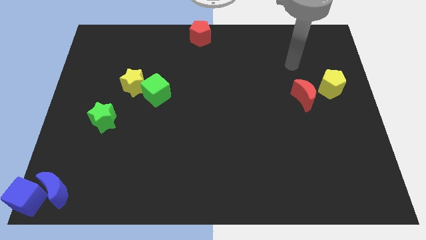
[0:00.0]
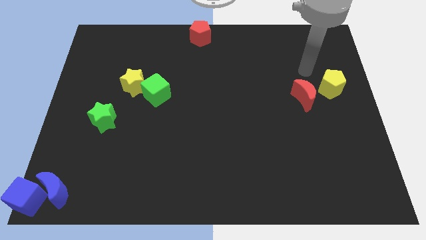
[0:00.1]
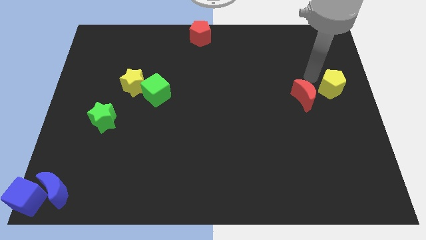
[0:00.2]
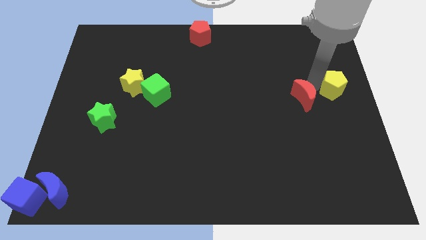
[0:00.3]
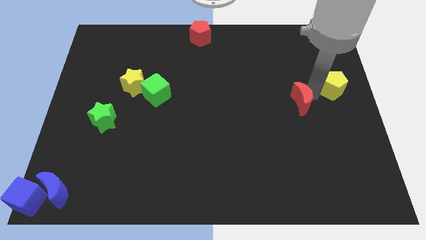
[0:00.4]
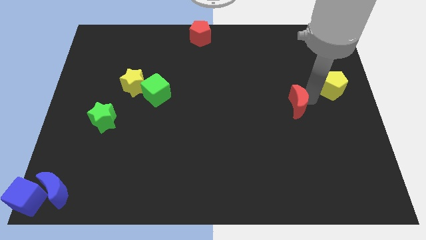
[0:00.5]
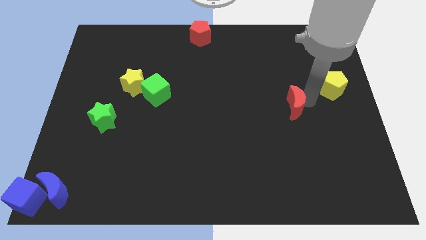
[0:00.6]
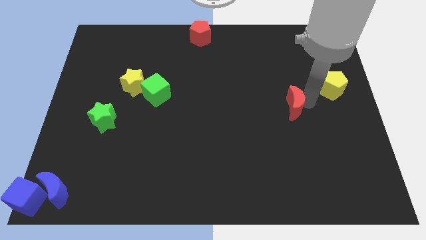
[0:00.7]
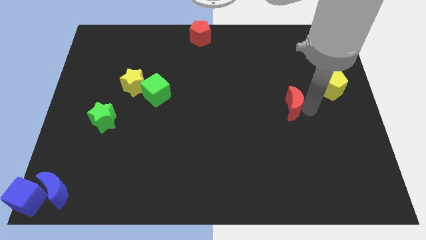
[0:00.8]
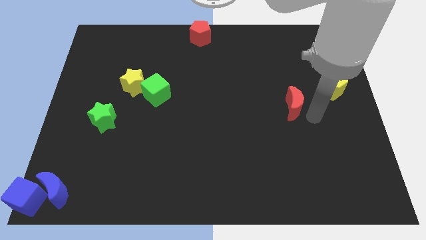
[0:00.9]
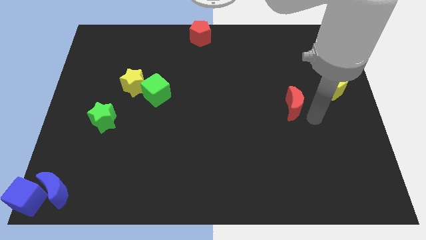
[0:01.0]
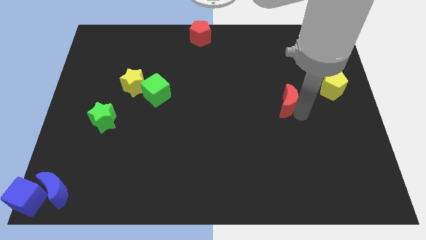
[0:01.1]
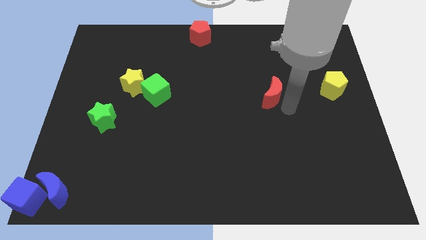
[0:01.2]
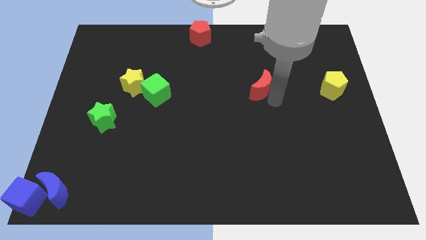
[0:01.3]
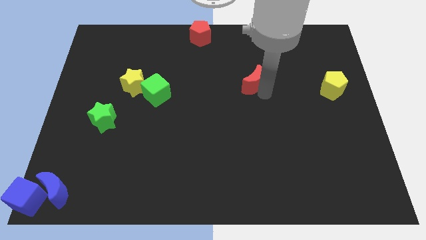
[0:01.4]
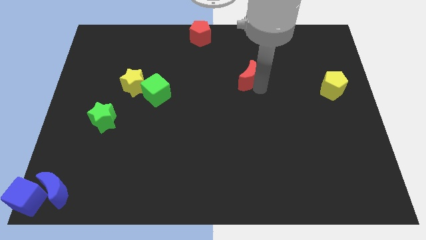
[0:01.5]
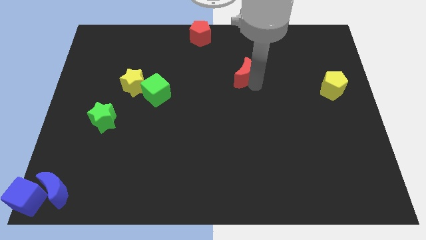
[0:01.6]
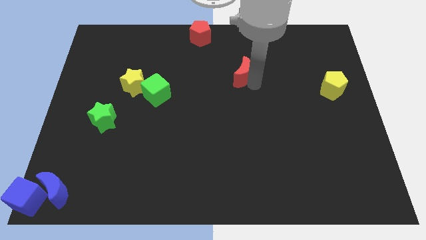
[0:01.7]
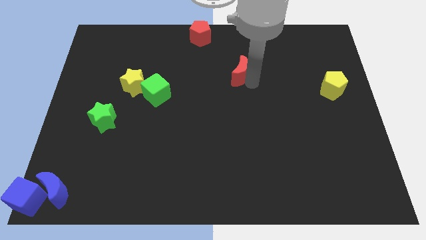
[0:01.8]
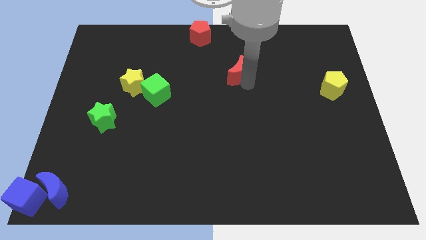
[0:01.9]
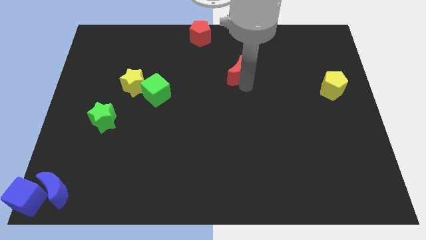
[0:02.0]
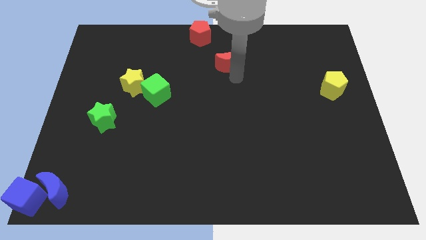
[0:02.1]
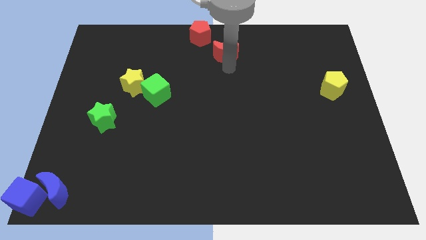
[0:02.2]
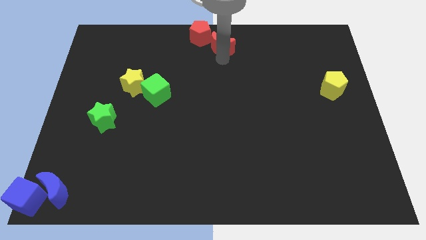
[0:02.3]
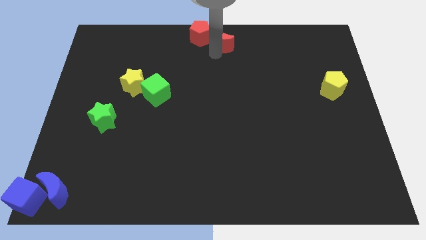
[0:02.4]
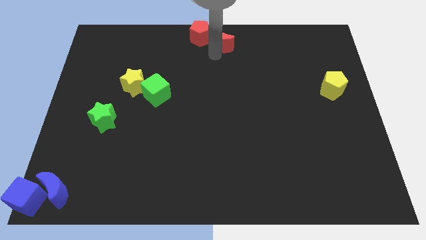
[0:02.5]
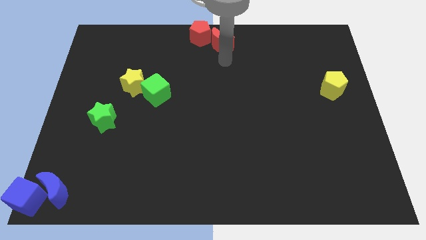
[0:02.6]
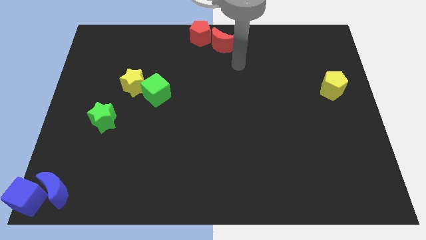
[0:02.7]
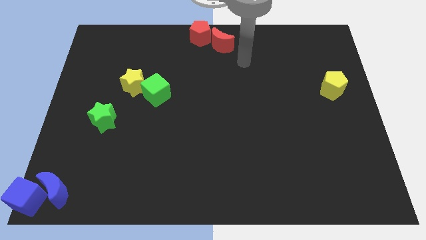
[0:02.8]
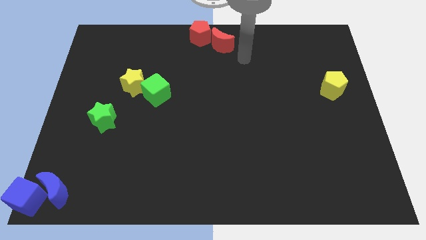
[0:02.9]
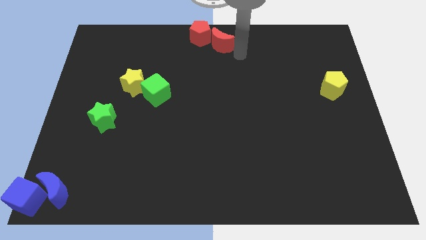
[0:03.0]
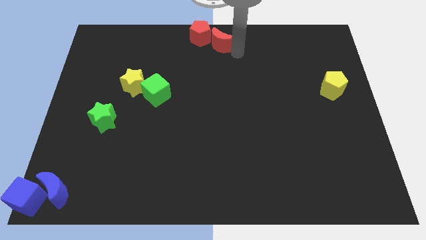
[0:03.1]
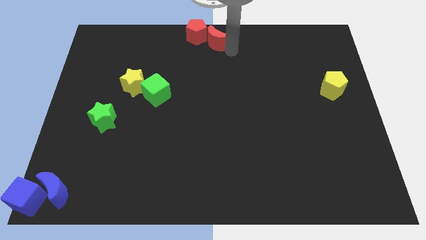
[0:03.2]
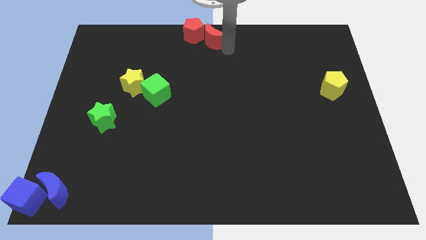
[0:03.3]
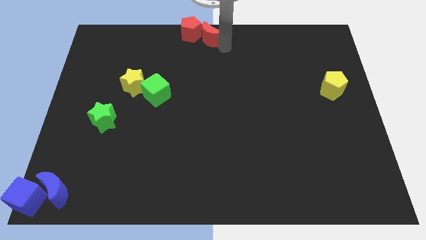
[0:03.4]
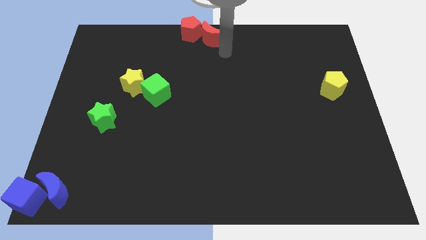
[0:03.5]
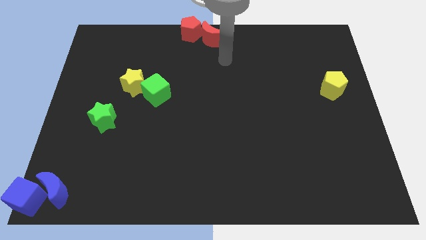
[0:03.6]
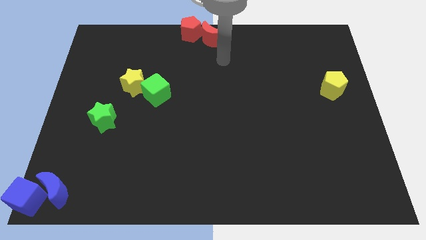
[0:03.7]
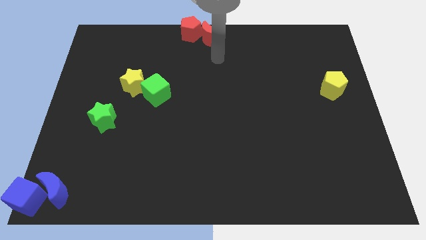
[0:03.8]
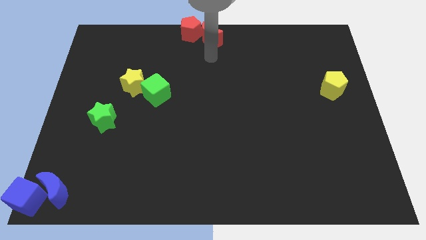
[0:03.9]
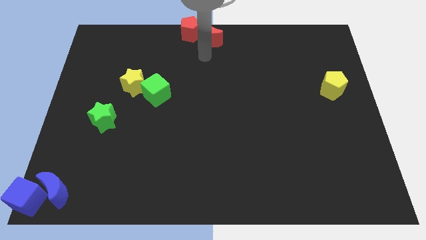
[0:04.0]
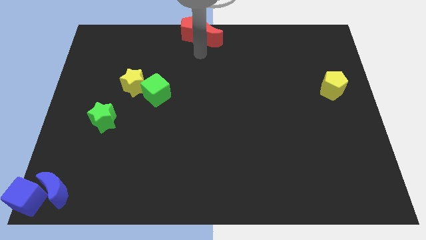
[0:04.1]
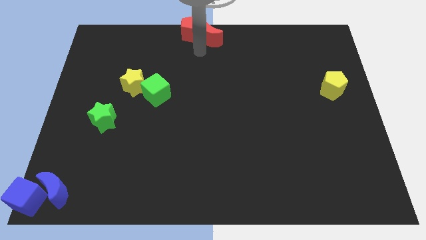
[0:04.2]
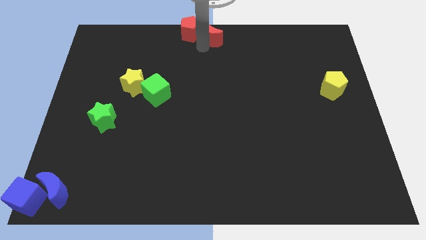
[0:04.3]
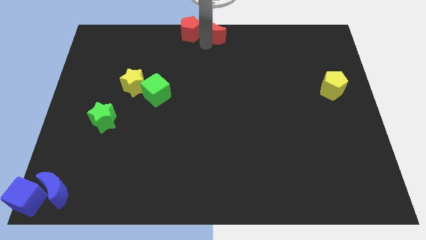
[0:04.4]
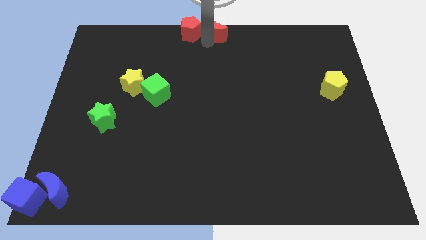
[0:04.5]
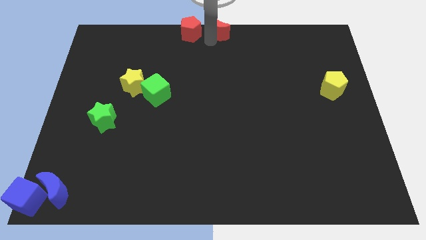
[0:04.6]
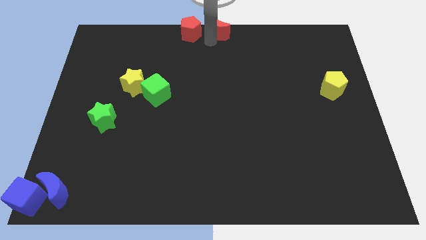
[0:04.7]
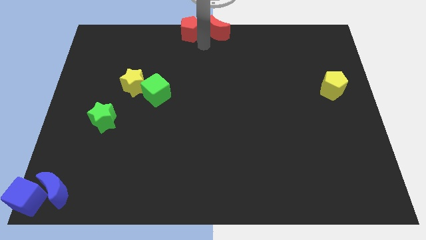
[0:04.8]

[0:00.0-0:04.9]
place red crescent beside red pentagon

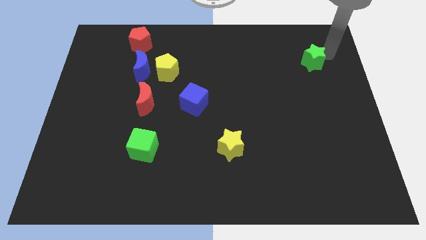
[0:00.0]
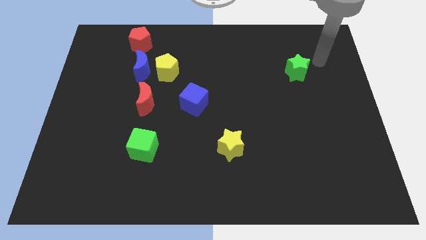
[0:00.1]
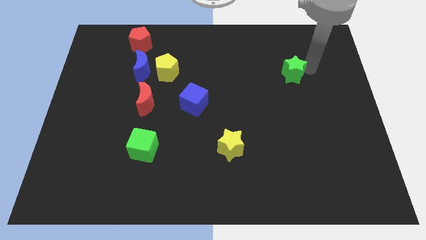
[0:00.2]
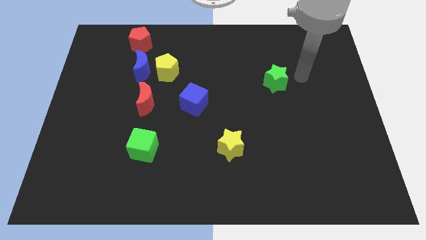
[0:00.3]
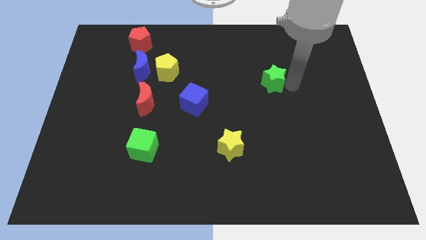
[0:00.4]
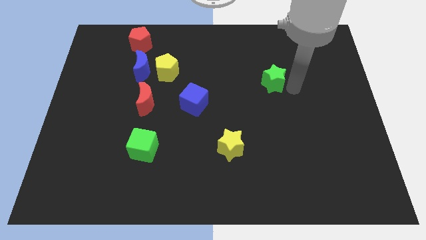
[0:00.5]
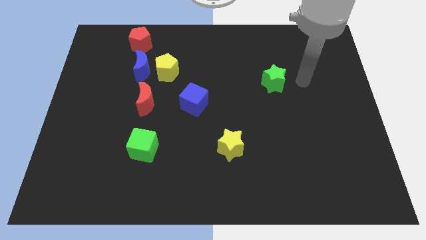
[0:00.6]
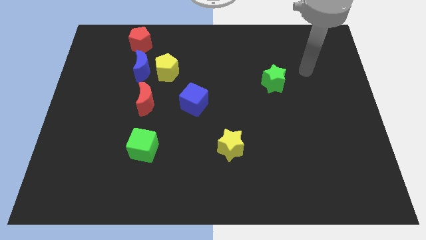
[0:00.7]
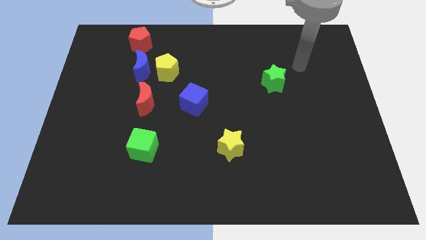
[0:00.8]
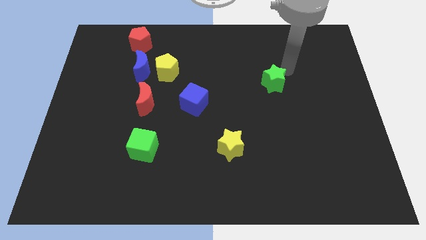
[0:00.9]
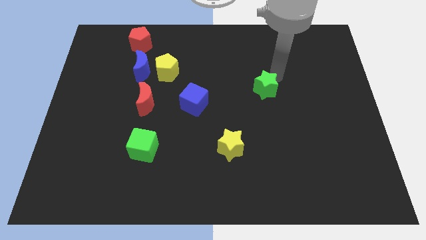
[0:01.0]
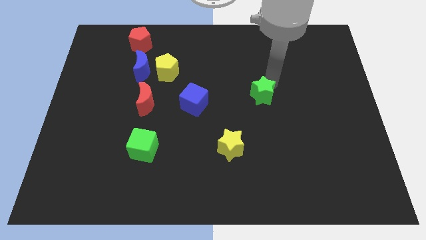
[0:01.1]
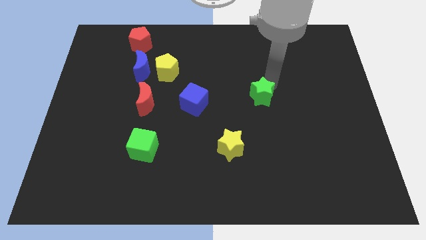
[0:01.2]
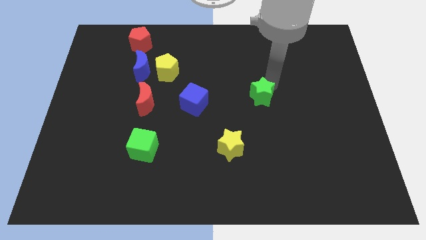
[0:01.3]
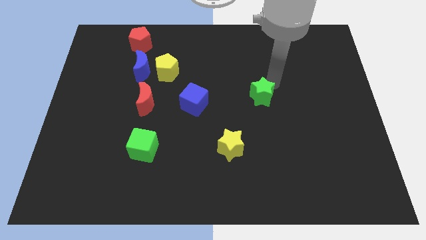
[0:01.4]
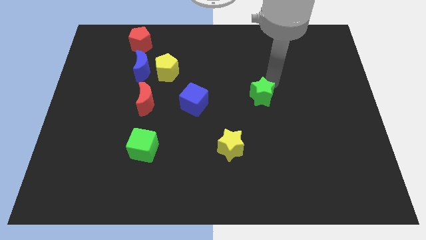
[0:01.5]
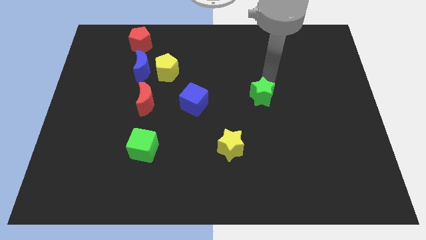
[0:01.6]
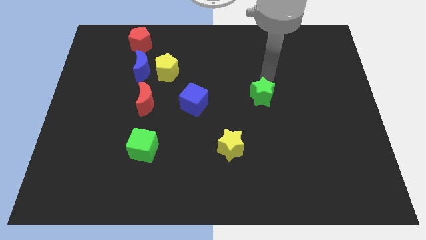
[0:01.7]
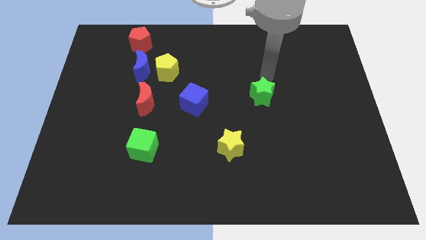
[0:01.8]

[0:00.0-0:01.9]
place the green star right to the blue cube

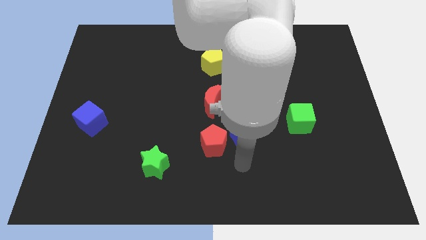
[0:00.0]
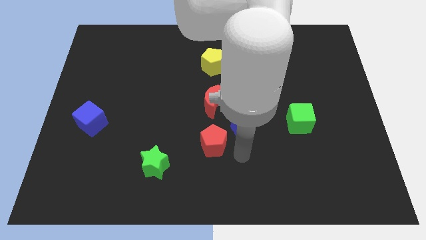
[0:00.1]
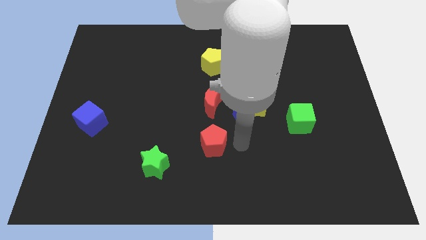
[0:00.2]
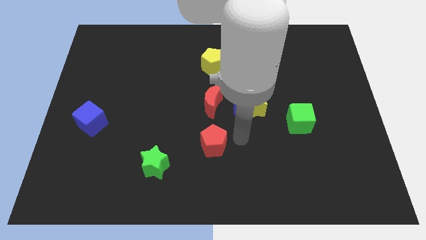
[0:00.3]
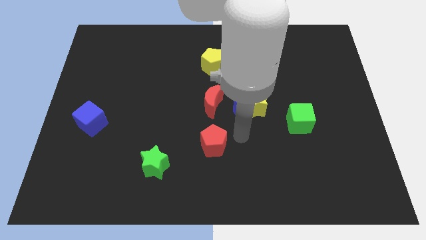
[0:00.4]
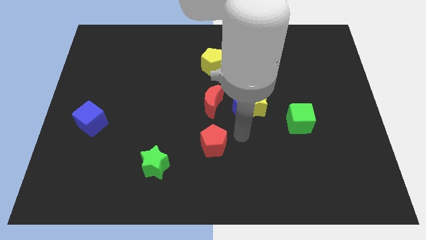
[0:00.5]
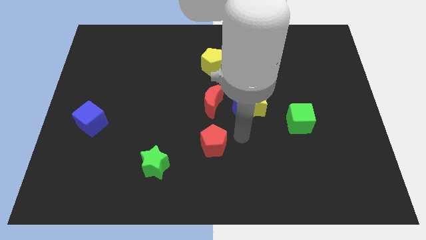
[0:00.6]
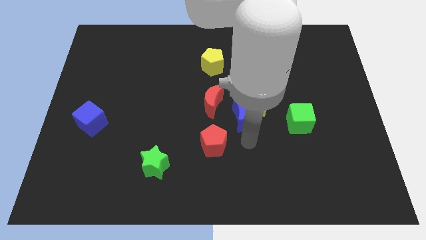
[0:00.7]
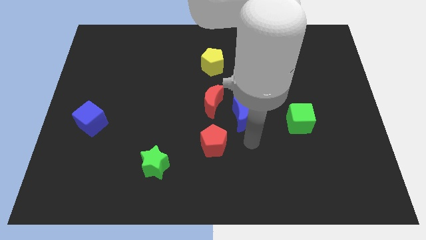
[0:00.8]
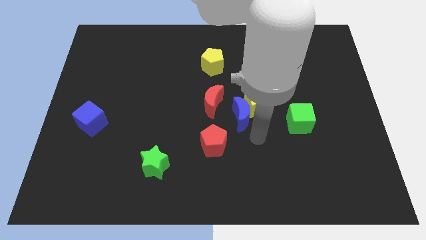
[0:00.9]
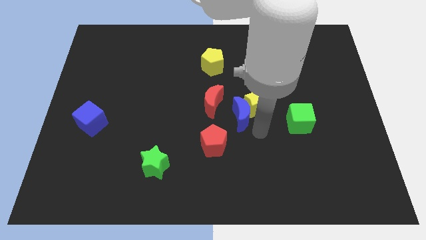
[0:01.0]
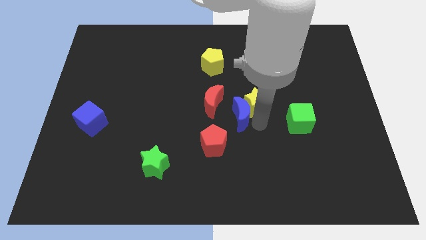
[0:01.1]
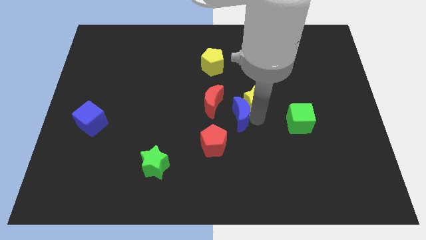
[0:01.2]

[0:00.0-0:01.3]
place the blue moon diagonal to the yellow star

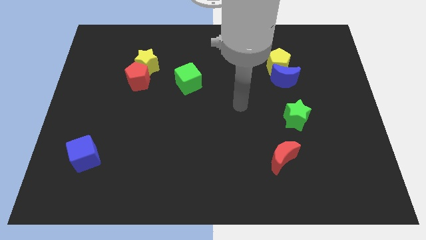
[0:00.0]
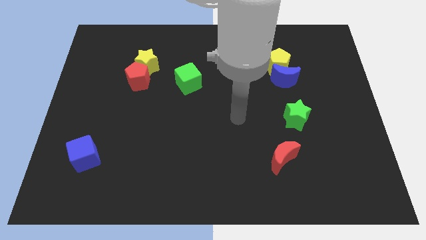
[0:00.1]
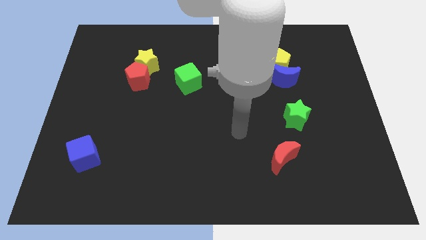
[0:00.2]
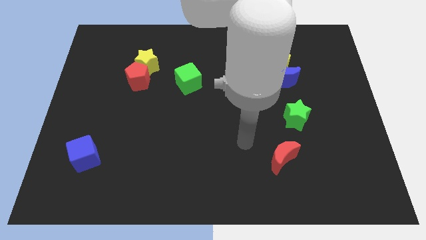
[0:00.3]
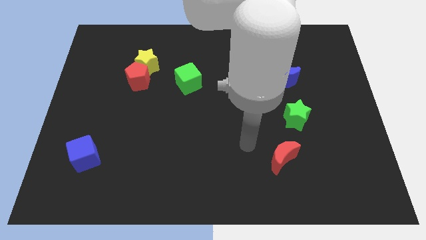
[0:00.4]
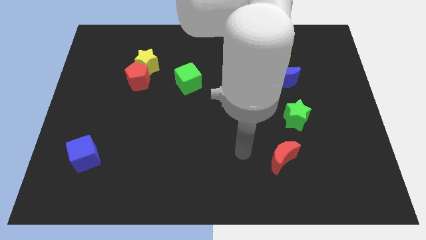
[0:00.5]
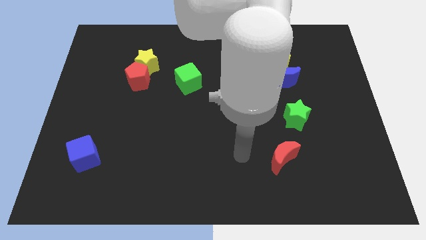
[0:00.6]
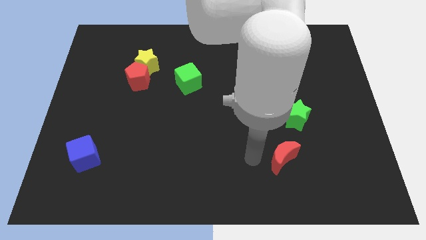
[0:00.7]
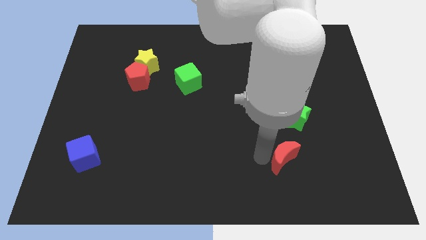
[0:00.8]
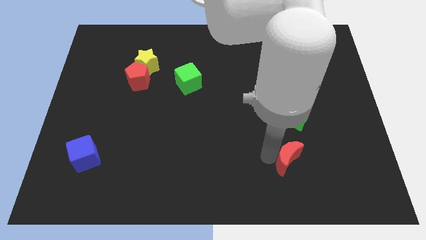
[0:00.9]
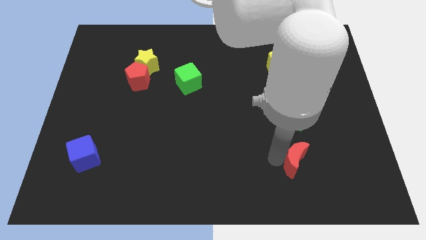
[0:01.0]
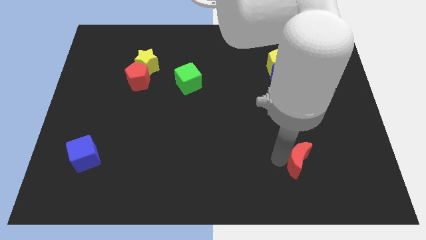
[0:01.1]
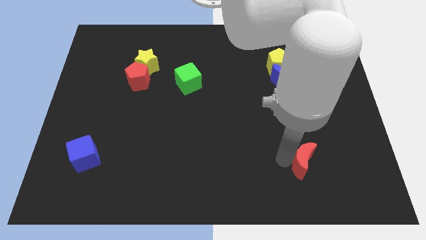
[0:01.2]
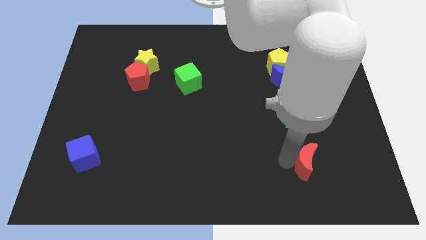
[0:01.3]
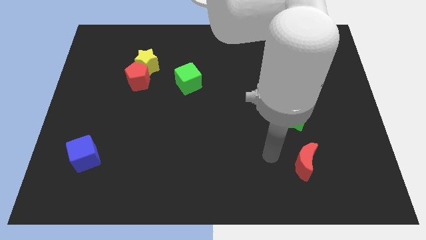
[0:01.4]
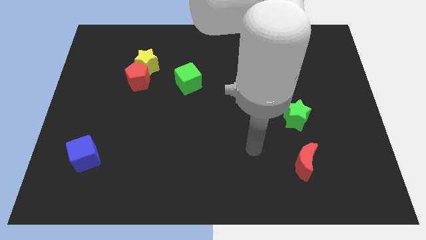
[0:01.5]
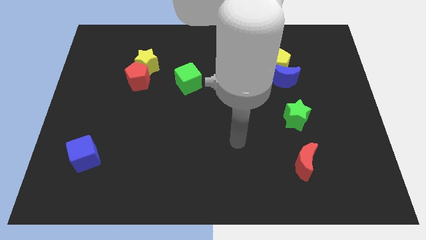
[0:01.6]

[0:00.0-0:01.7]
slightly move the red crescent towards right
